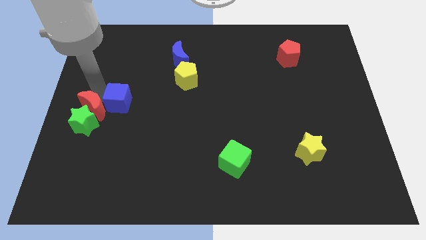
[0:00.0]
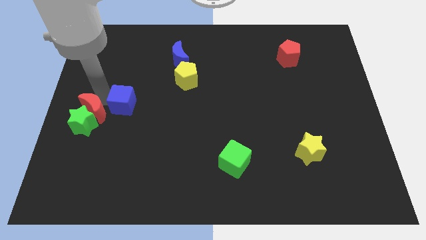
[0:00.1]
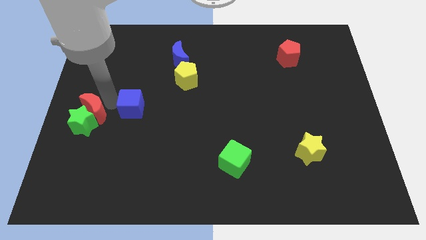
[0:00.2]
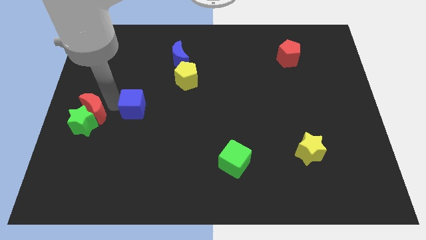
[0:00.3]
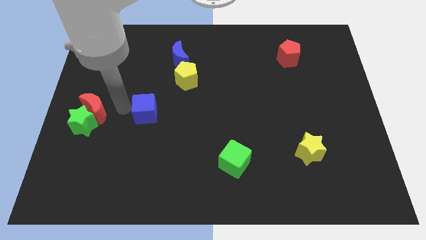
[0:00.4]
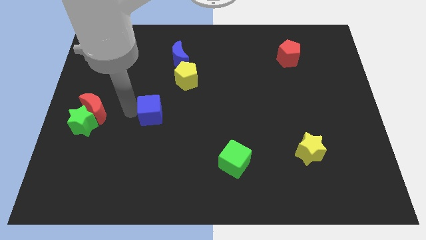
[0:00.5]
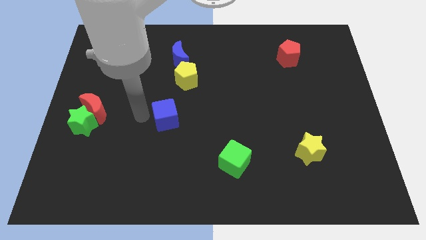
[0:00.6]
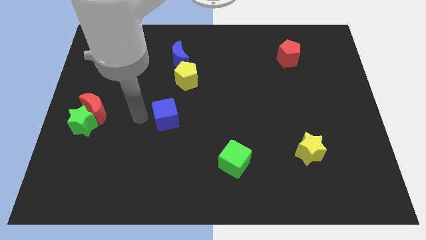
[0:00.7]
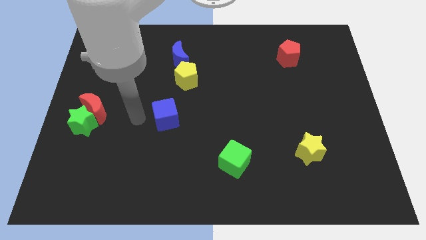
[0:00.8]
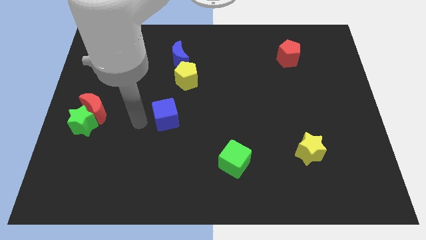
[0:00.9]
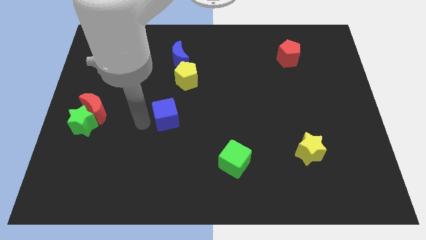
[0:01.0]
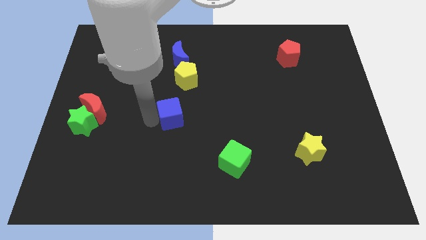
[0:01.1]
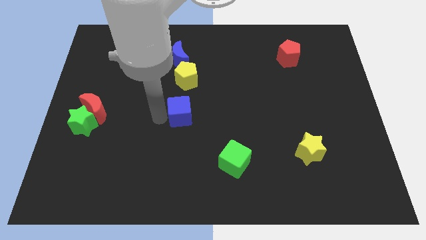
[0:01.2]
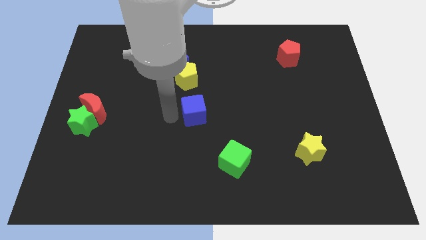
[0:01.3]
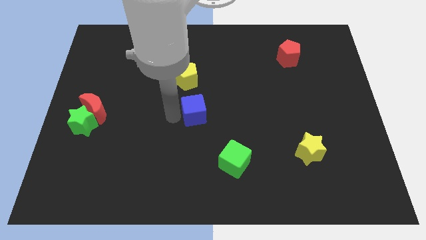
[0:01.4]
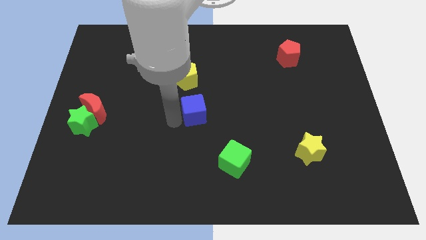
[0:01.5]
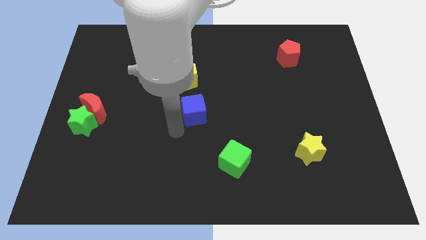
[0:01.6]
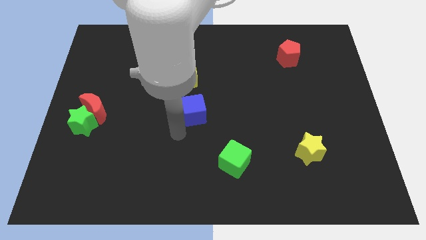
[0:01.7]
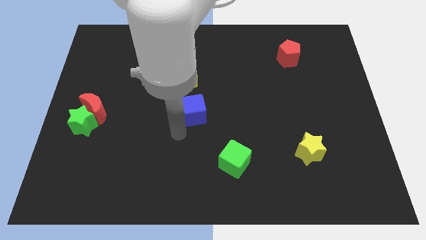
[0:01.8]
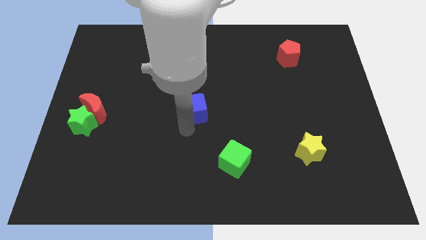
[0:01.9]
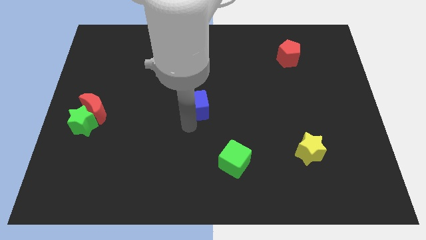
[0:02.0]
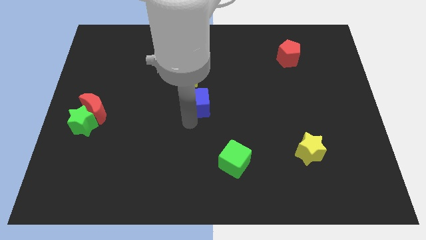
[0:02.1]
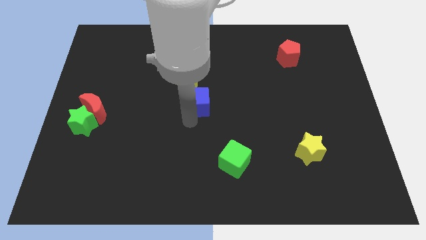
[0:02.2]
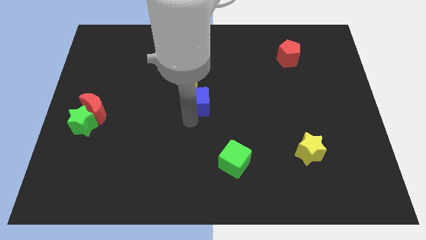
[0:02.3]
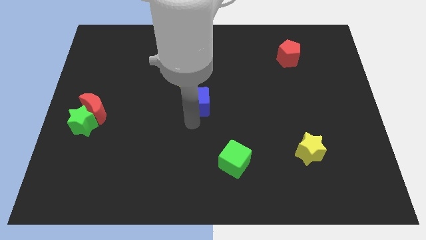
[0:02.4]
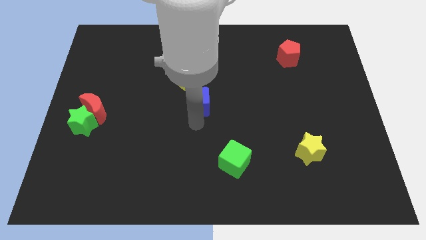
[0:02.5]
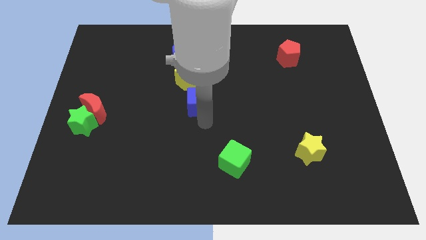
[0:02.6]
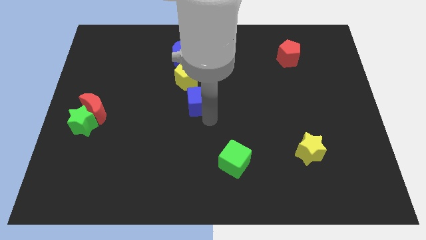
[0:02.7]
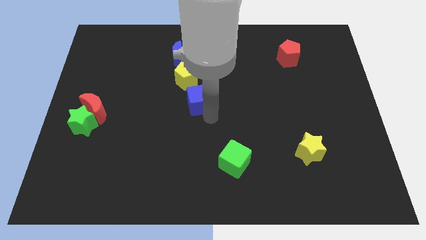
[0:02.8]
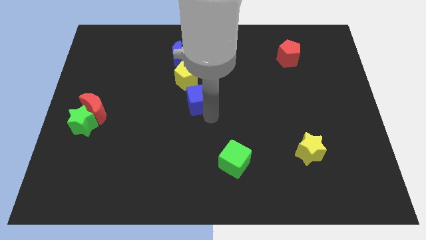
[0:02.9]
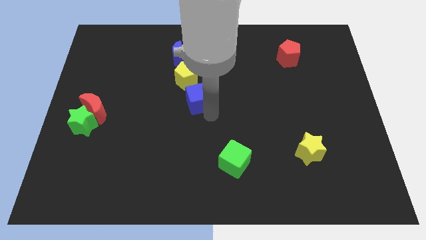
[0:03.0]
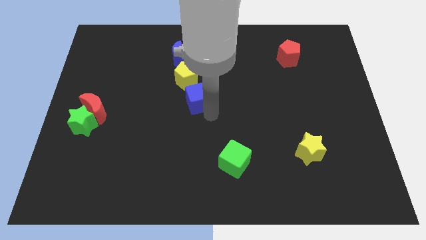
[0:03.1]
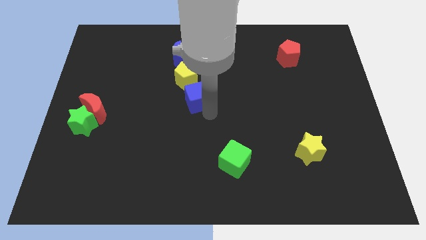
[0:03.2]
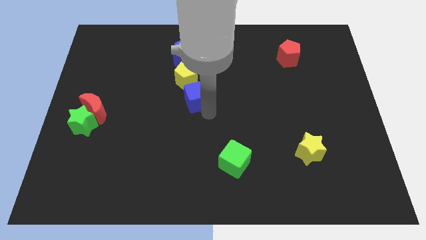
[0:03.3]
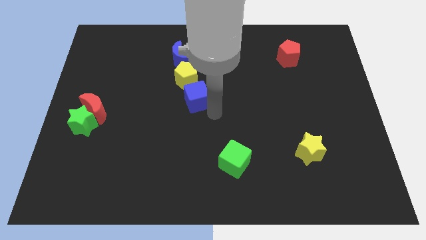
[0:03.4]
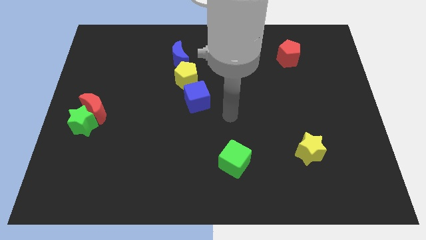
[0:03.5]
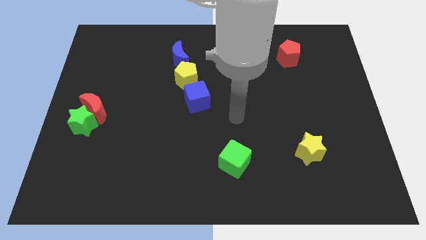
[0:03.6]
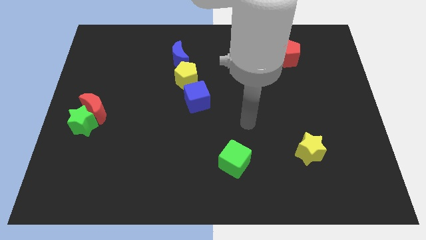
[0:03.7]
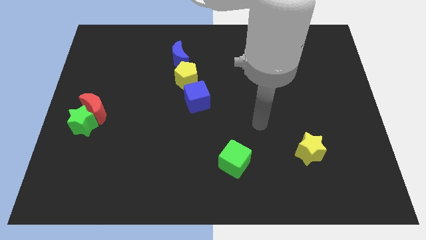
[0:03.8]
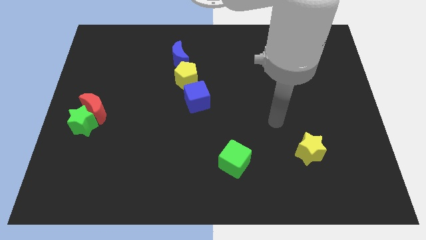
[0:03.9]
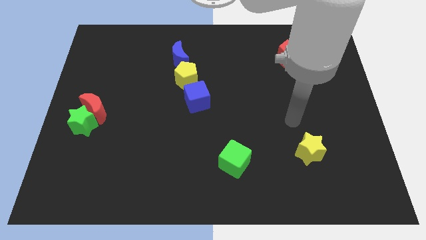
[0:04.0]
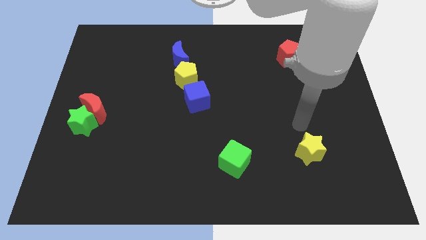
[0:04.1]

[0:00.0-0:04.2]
place the blue cube at the bottom of the yellow pentagon

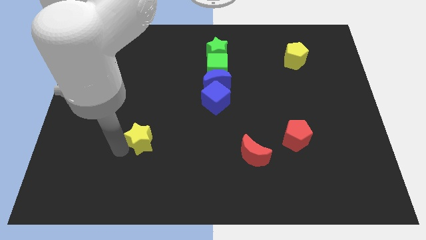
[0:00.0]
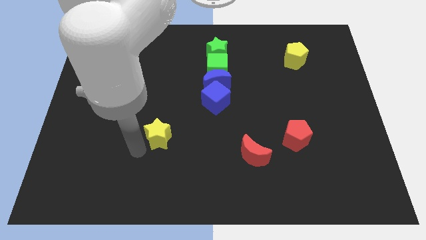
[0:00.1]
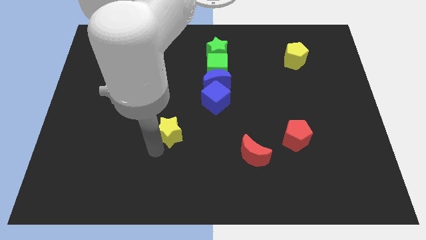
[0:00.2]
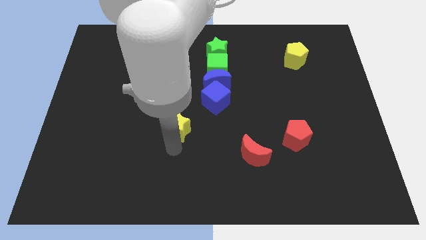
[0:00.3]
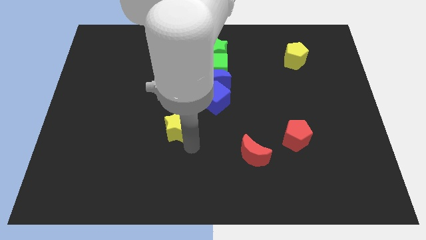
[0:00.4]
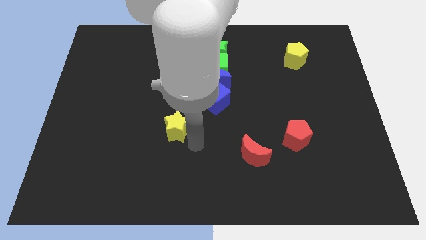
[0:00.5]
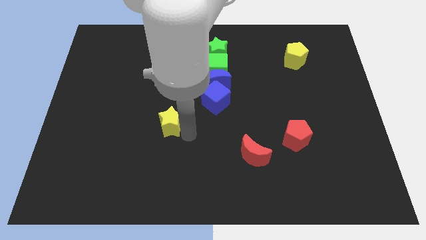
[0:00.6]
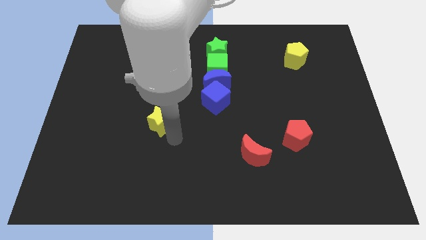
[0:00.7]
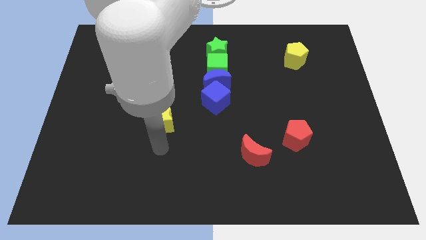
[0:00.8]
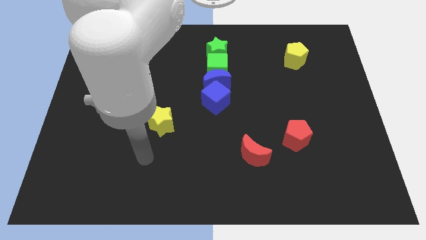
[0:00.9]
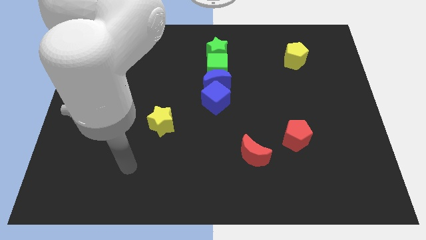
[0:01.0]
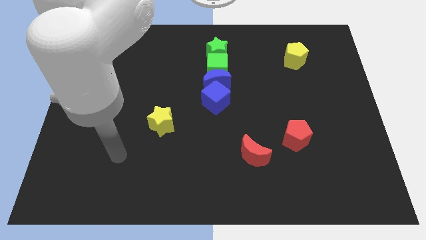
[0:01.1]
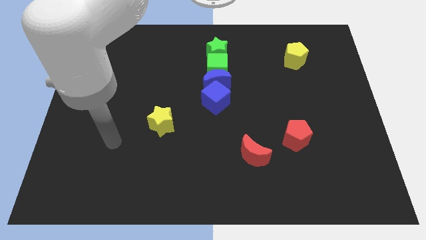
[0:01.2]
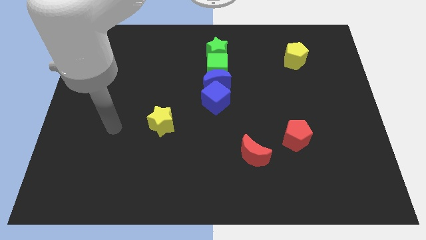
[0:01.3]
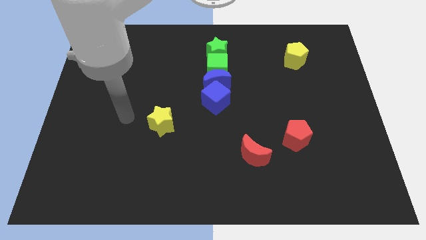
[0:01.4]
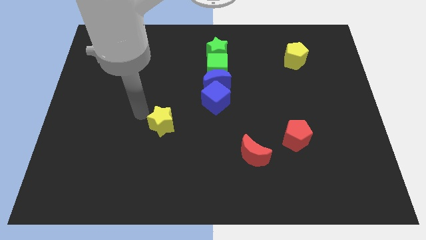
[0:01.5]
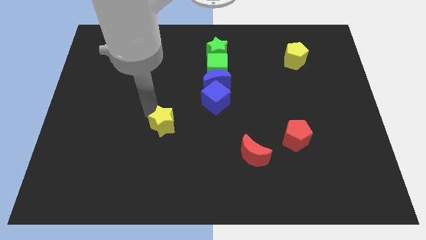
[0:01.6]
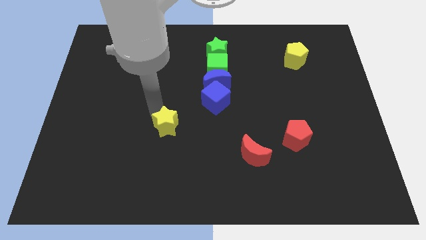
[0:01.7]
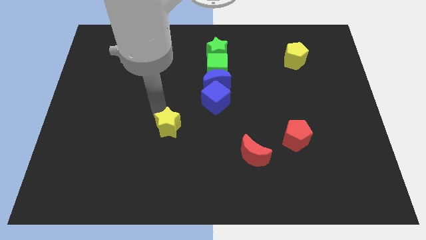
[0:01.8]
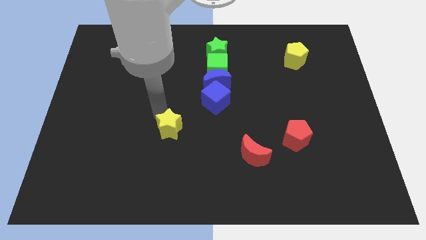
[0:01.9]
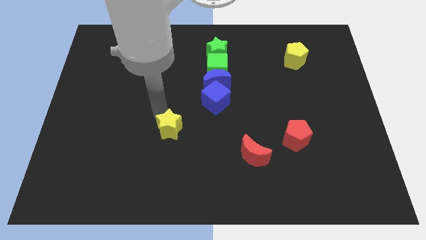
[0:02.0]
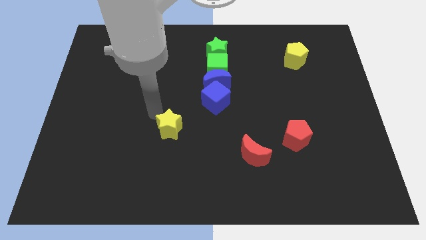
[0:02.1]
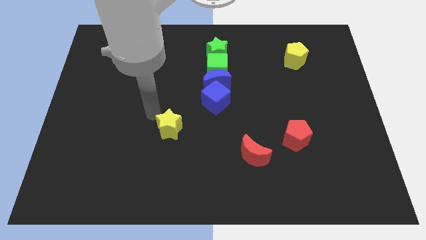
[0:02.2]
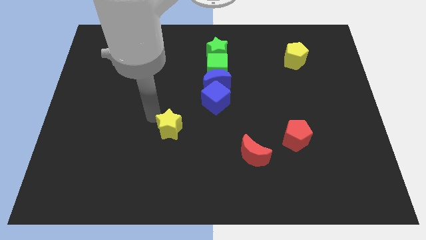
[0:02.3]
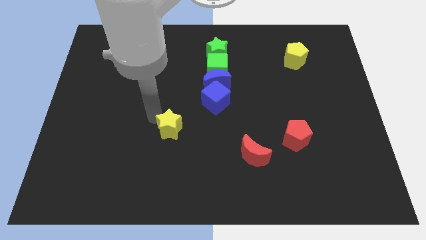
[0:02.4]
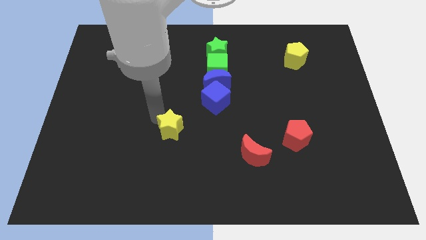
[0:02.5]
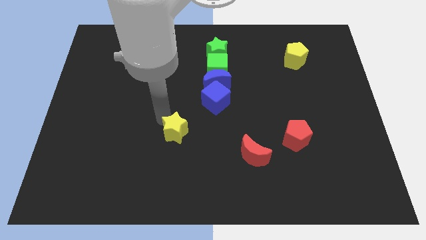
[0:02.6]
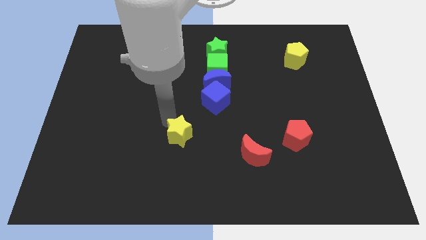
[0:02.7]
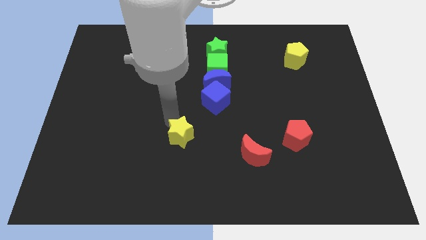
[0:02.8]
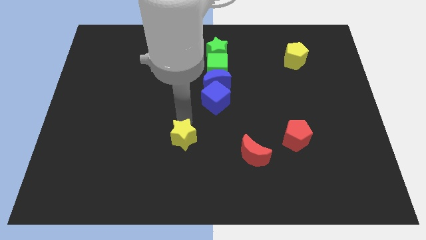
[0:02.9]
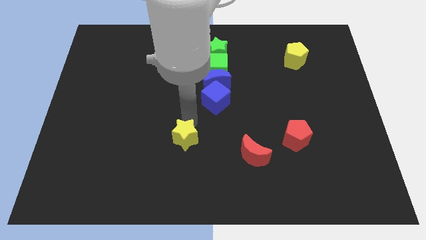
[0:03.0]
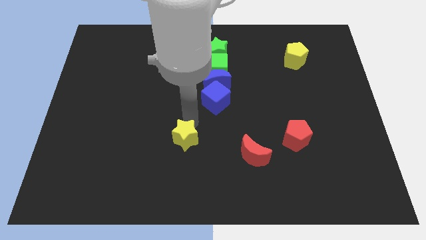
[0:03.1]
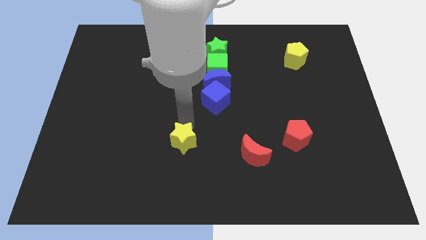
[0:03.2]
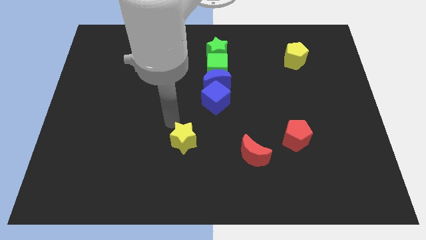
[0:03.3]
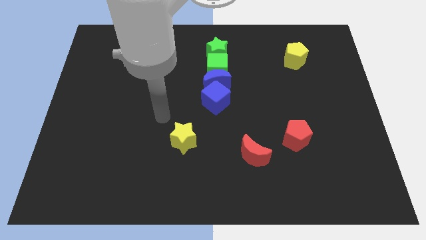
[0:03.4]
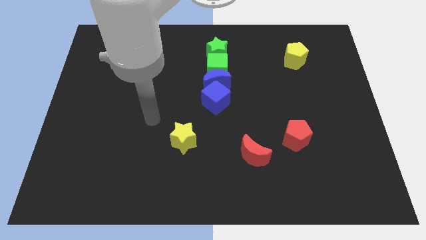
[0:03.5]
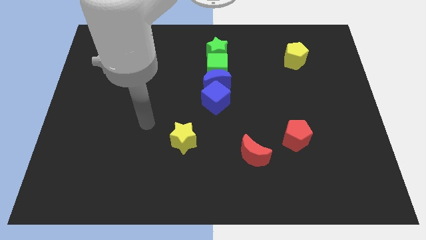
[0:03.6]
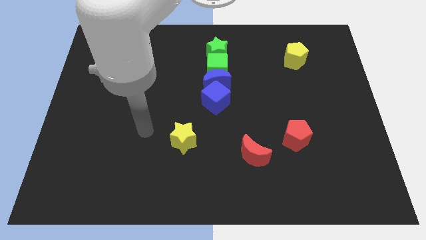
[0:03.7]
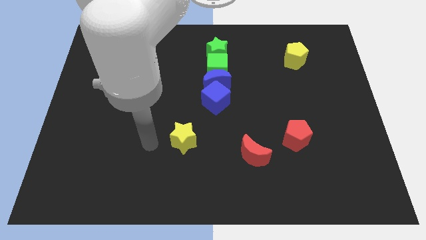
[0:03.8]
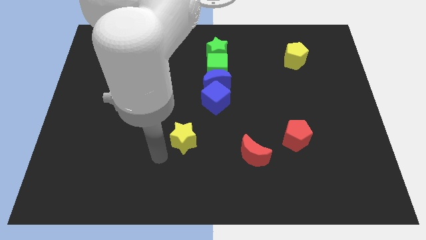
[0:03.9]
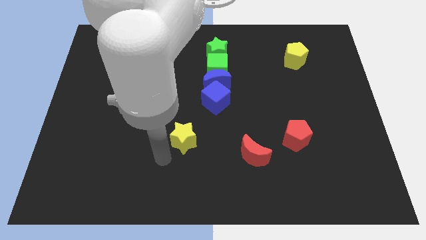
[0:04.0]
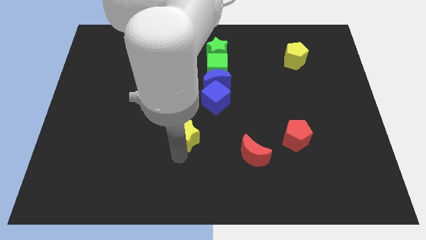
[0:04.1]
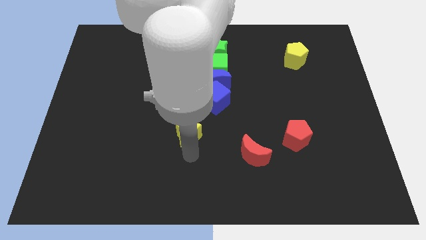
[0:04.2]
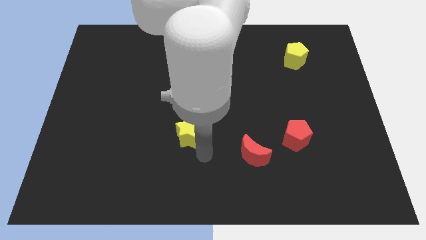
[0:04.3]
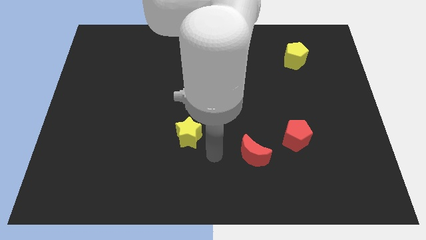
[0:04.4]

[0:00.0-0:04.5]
move the yellow star towards the blue cube
